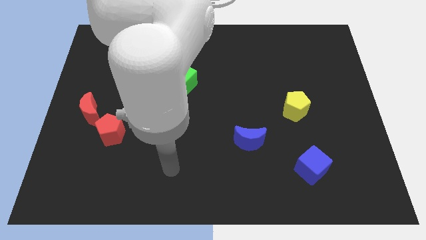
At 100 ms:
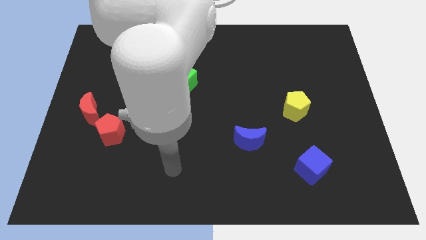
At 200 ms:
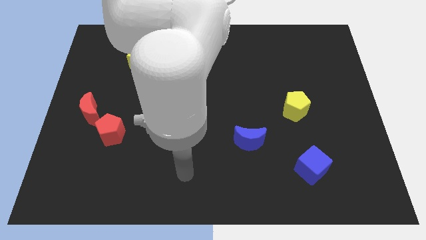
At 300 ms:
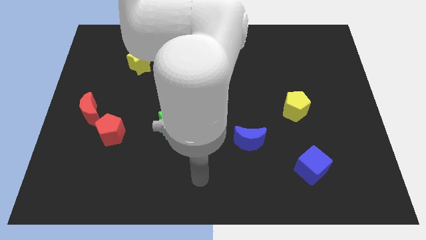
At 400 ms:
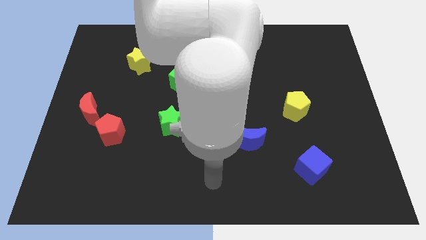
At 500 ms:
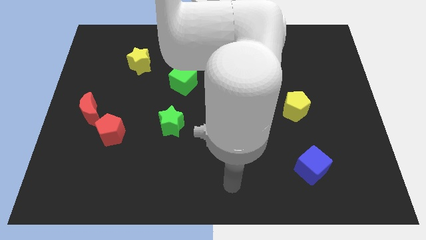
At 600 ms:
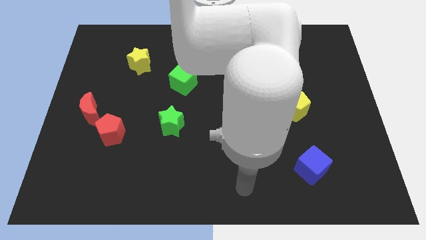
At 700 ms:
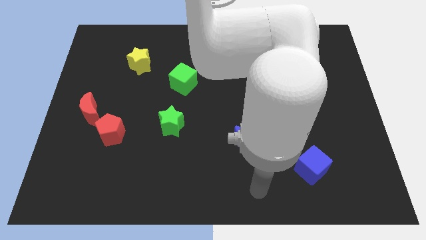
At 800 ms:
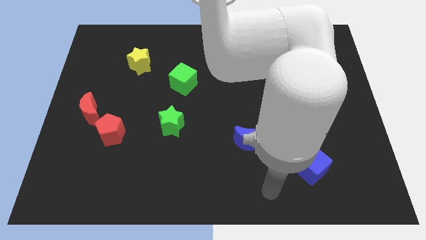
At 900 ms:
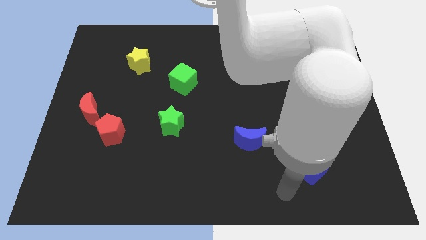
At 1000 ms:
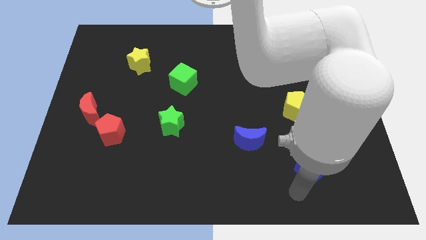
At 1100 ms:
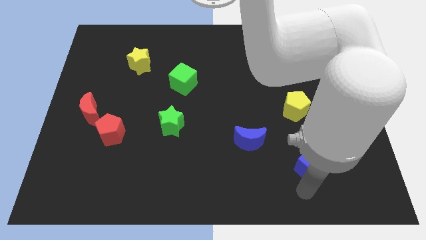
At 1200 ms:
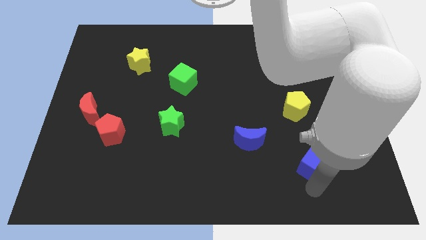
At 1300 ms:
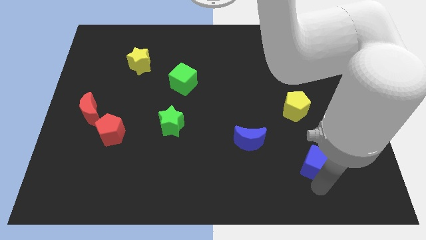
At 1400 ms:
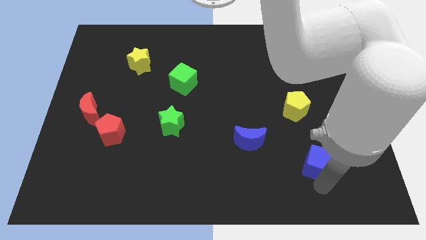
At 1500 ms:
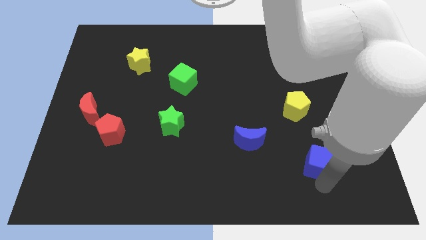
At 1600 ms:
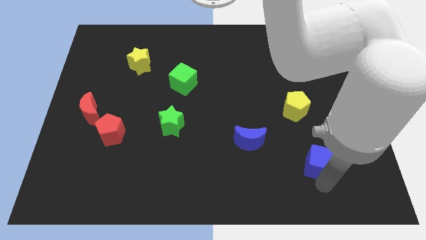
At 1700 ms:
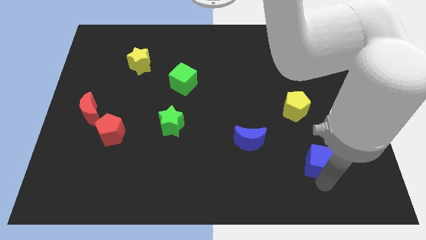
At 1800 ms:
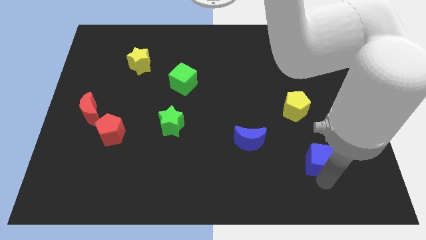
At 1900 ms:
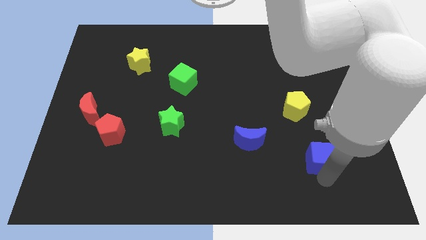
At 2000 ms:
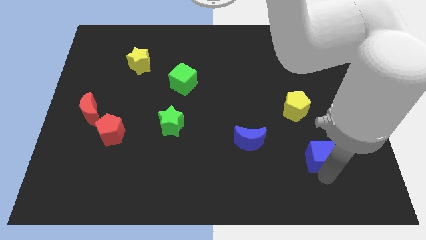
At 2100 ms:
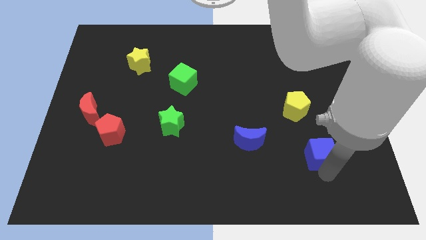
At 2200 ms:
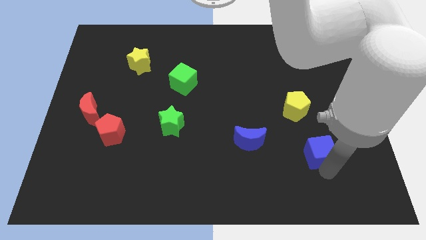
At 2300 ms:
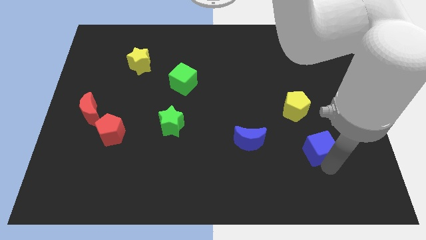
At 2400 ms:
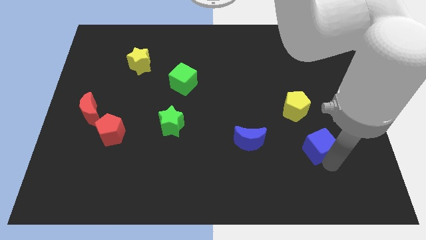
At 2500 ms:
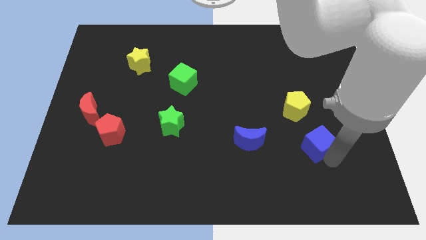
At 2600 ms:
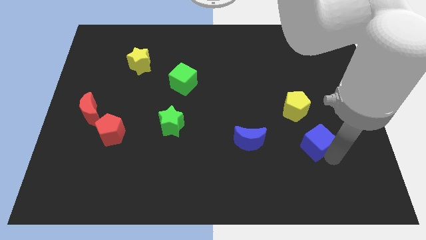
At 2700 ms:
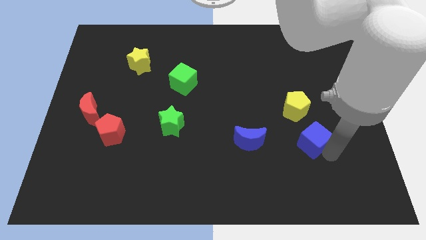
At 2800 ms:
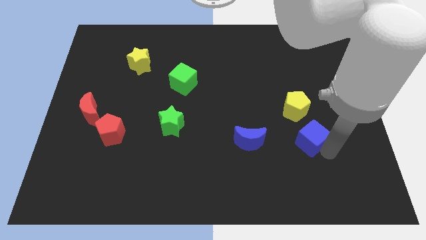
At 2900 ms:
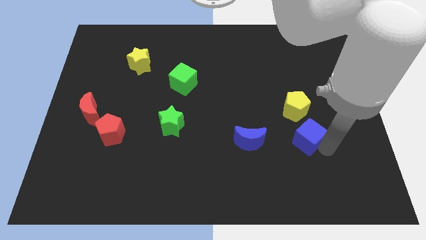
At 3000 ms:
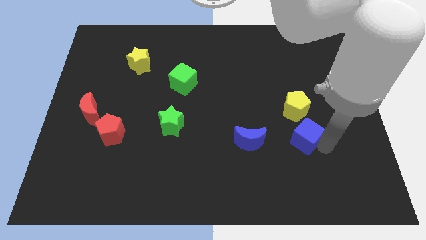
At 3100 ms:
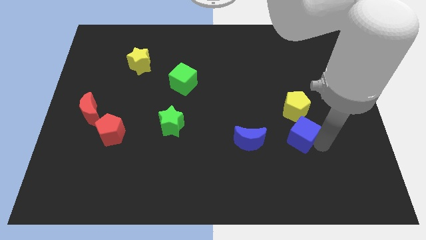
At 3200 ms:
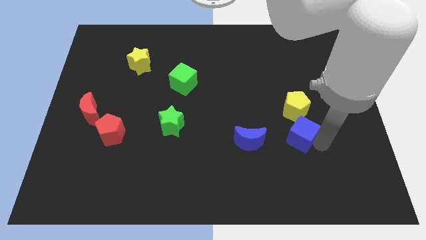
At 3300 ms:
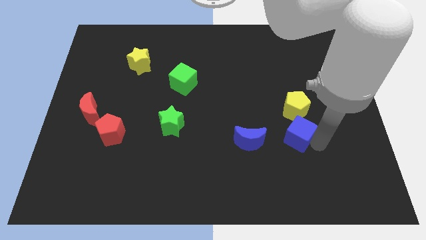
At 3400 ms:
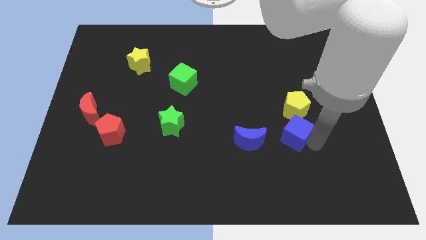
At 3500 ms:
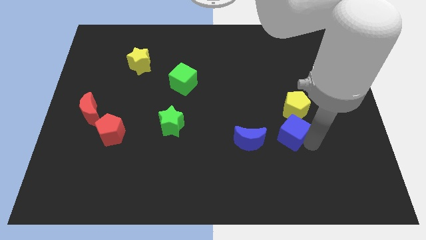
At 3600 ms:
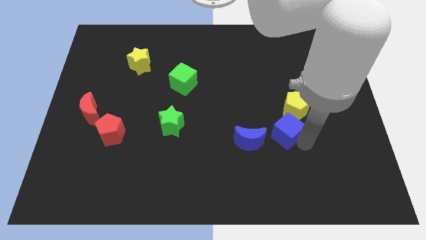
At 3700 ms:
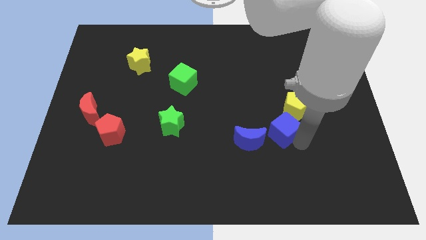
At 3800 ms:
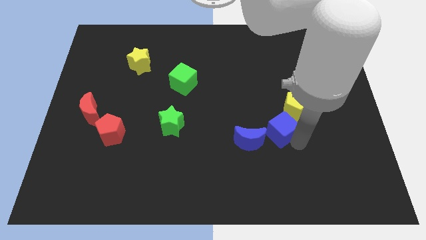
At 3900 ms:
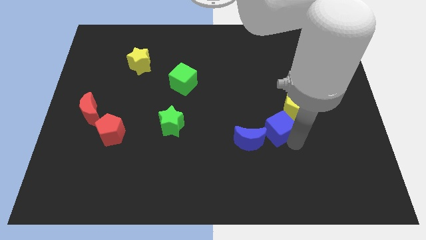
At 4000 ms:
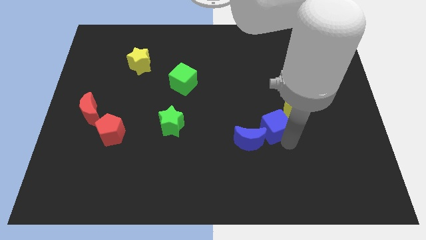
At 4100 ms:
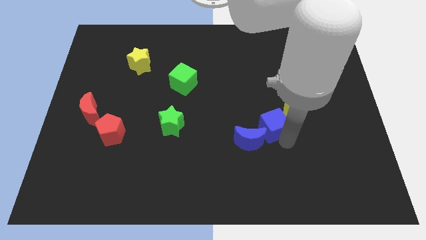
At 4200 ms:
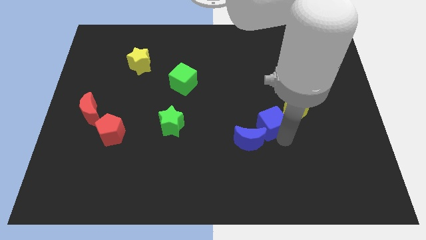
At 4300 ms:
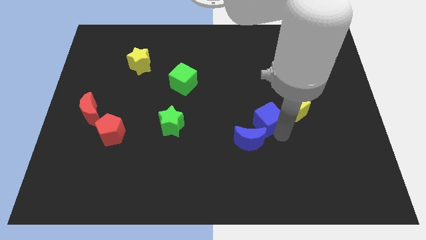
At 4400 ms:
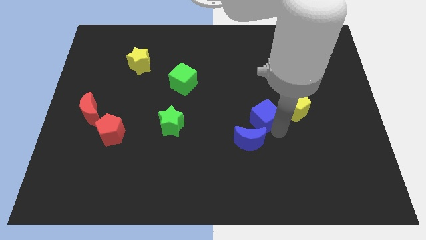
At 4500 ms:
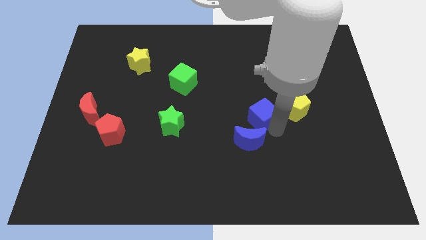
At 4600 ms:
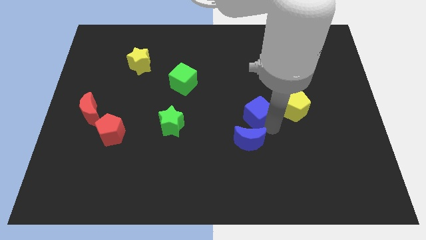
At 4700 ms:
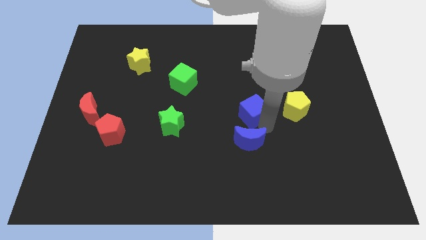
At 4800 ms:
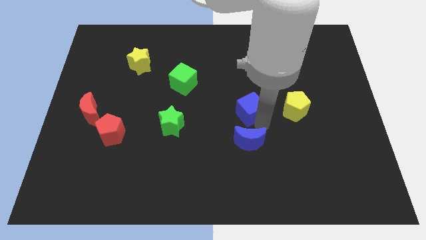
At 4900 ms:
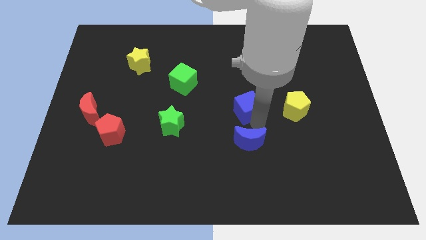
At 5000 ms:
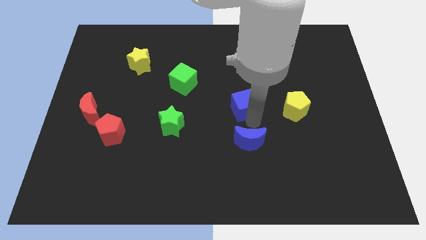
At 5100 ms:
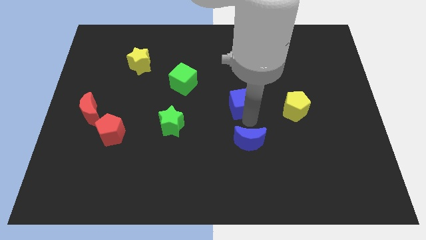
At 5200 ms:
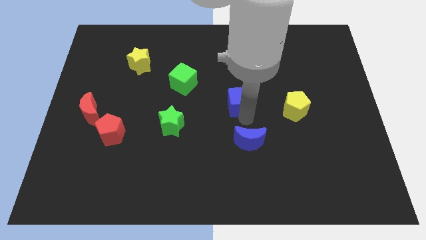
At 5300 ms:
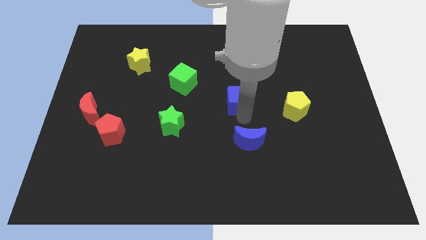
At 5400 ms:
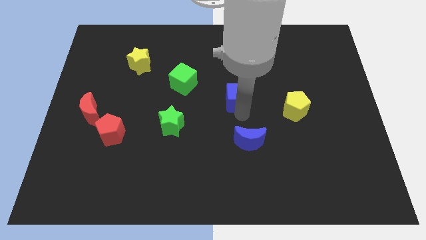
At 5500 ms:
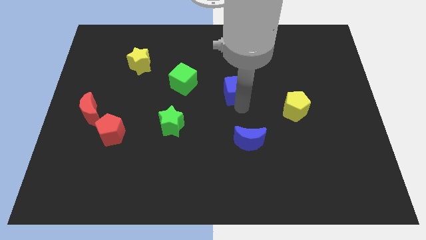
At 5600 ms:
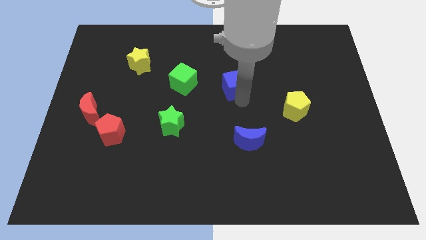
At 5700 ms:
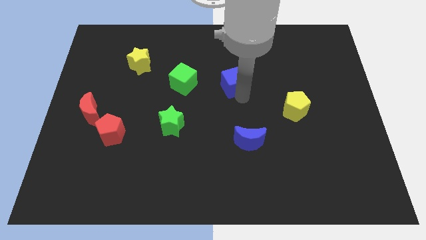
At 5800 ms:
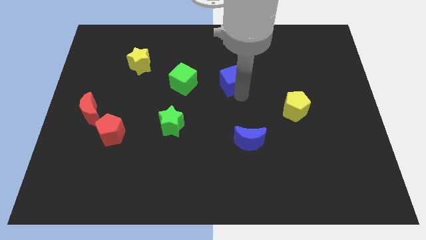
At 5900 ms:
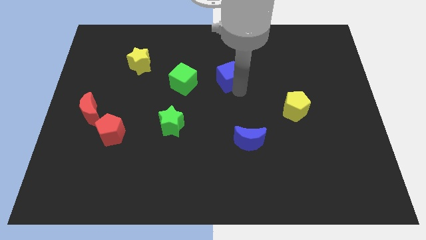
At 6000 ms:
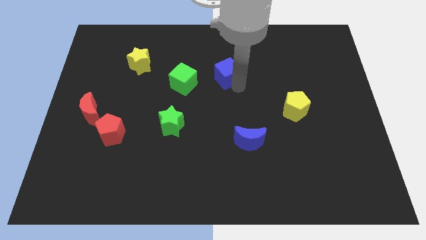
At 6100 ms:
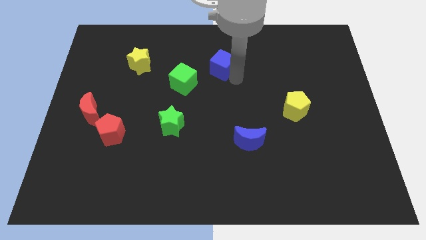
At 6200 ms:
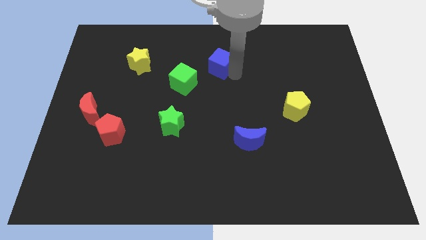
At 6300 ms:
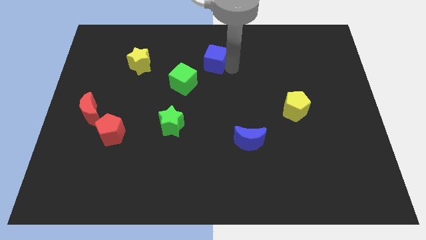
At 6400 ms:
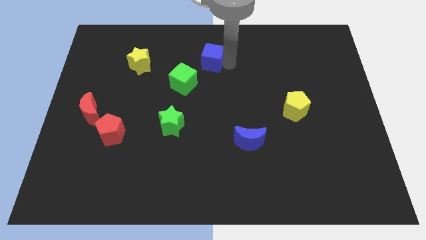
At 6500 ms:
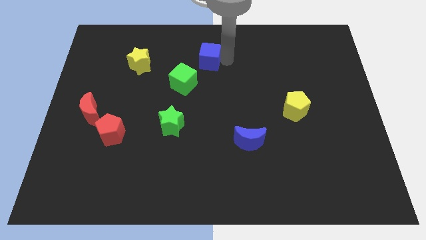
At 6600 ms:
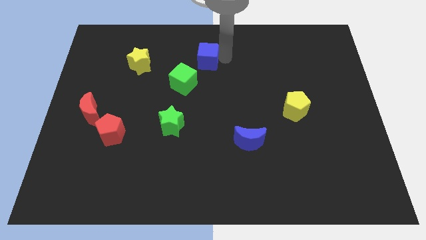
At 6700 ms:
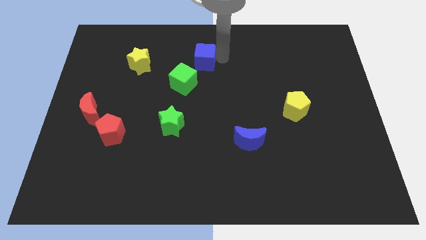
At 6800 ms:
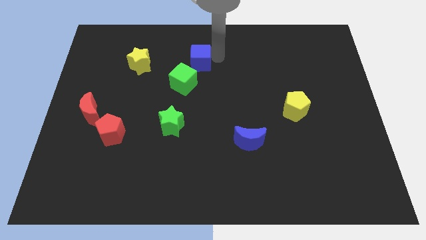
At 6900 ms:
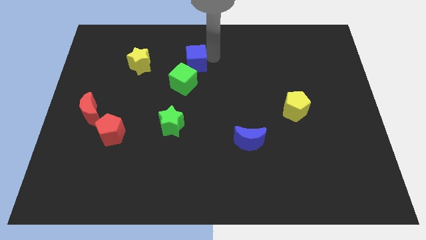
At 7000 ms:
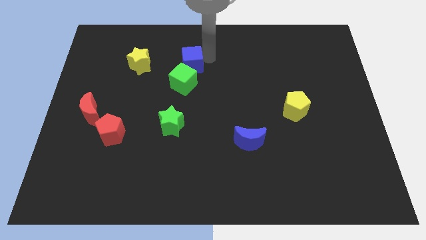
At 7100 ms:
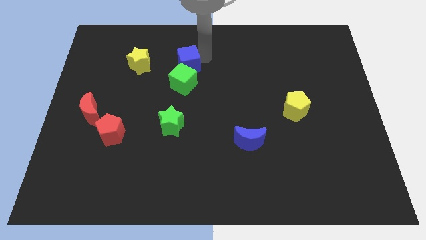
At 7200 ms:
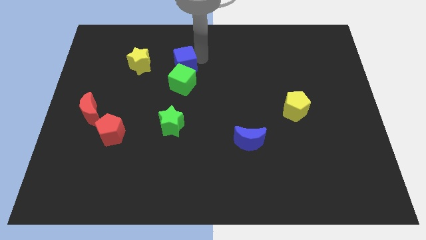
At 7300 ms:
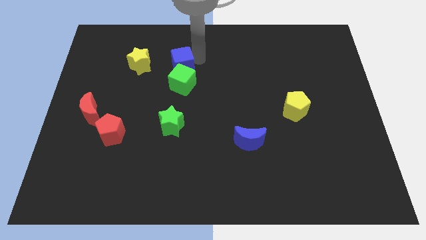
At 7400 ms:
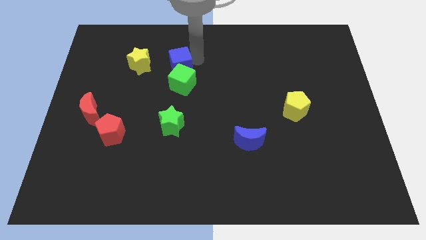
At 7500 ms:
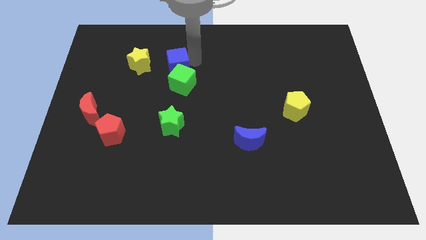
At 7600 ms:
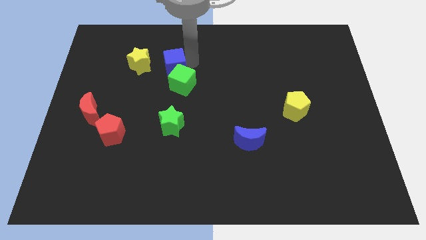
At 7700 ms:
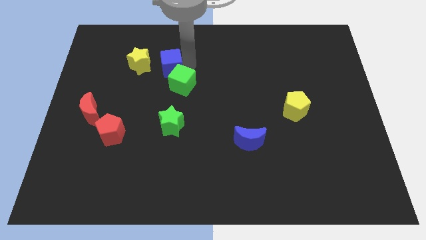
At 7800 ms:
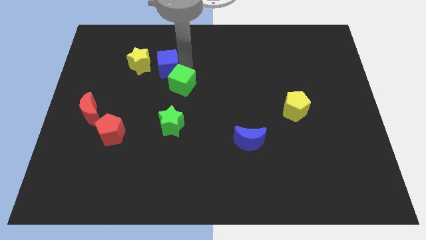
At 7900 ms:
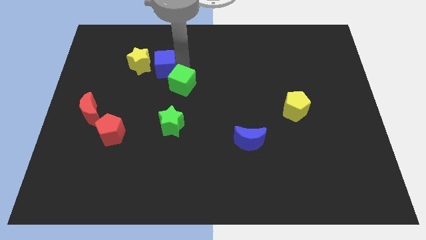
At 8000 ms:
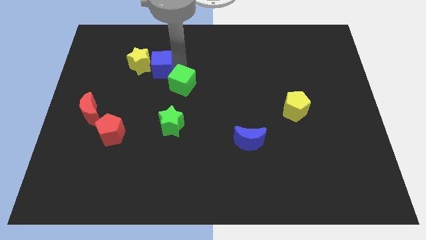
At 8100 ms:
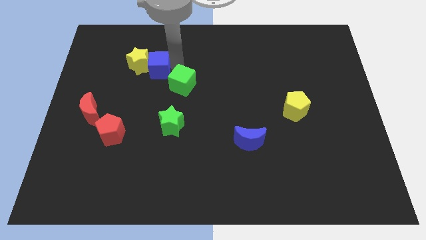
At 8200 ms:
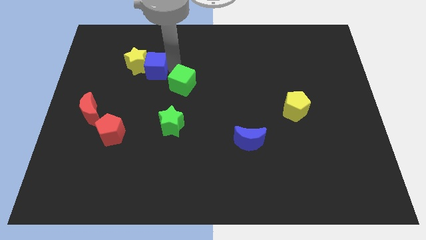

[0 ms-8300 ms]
put the blue cube next to the yellow star

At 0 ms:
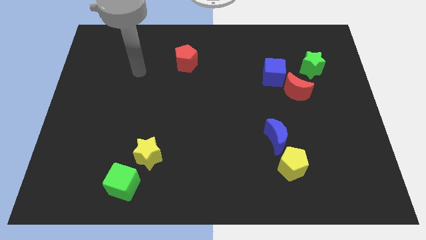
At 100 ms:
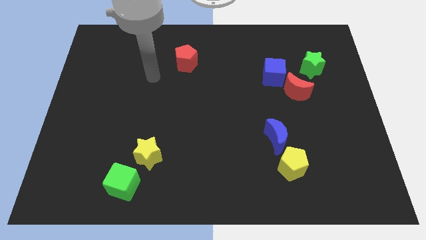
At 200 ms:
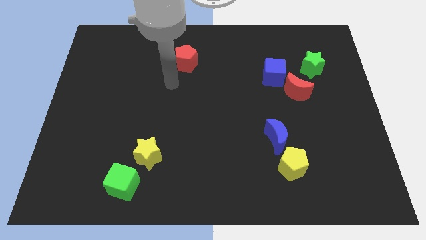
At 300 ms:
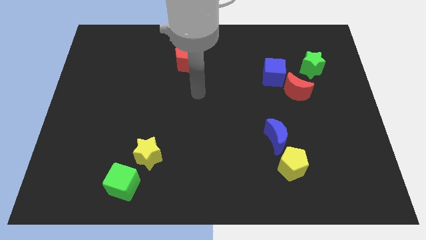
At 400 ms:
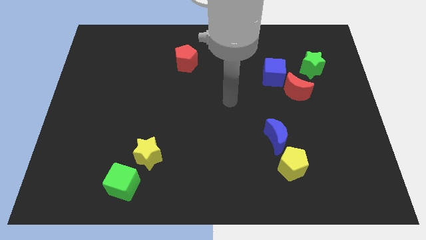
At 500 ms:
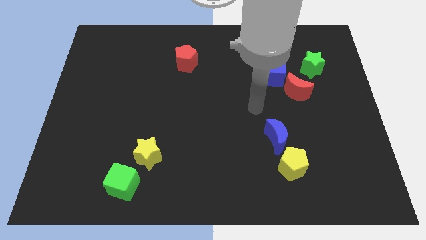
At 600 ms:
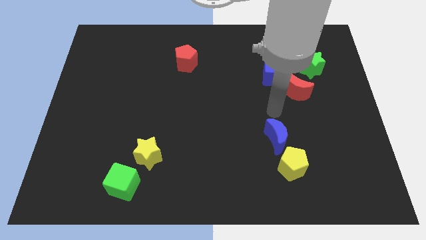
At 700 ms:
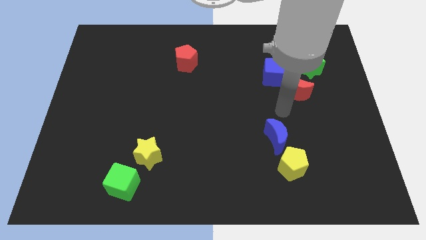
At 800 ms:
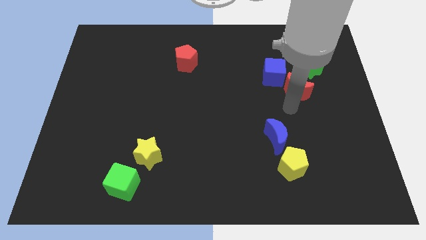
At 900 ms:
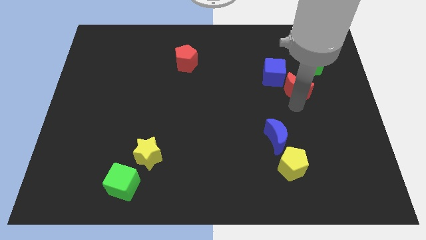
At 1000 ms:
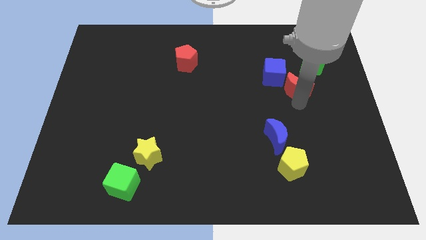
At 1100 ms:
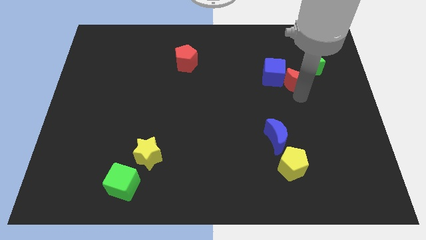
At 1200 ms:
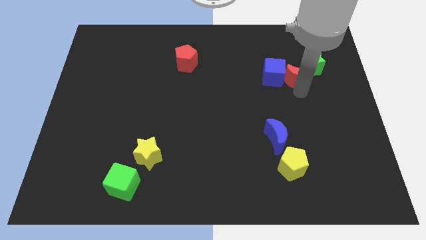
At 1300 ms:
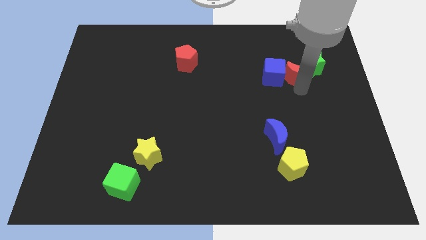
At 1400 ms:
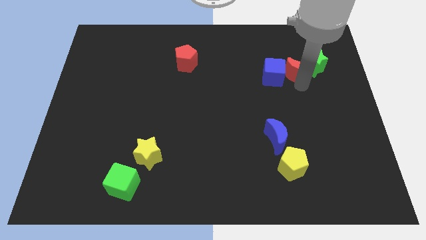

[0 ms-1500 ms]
push the red moon to the green star
